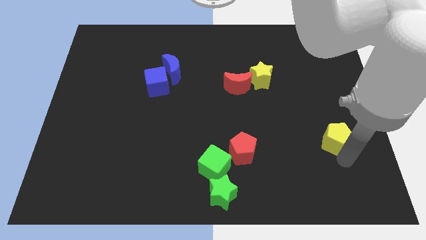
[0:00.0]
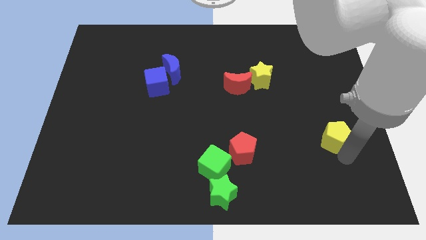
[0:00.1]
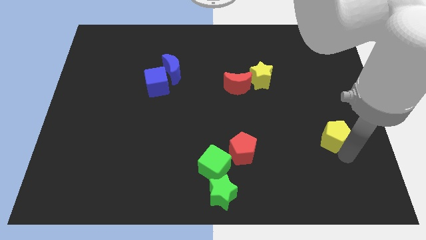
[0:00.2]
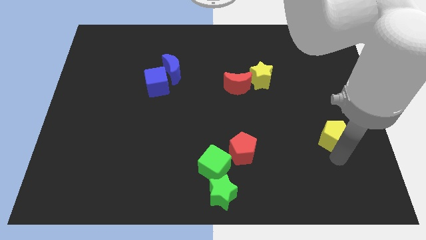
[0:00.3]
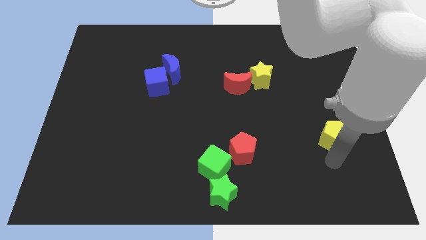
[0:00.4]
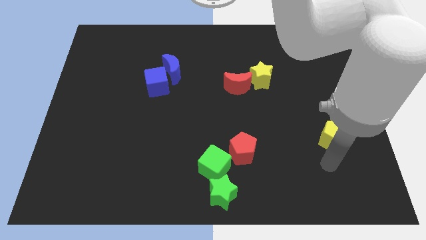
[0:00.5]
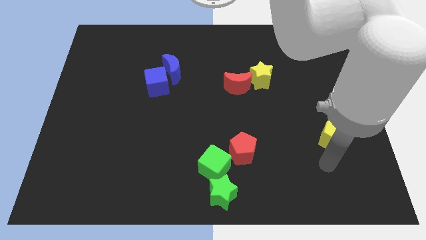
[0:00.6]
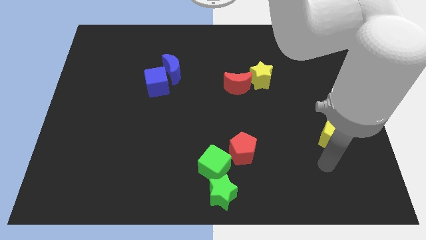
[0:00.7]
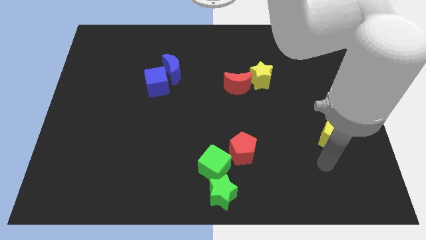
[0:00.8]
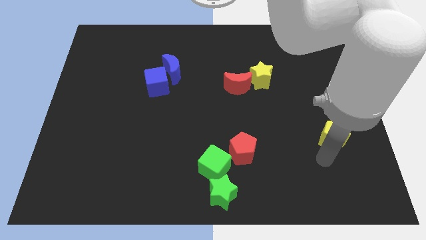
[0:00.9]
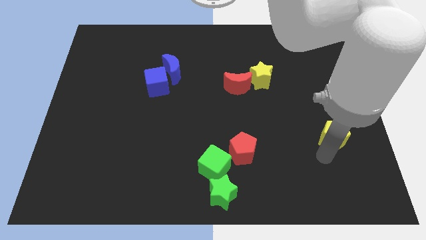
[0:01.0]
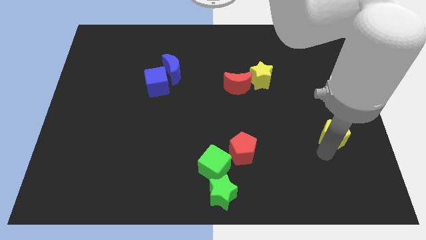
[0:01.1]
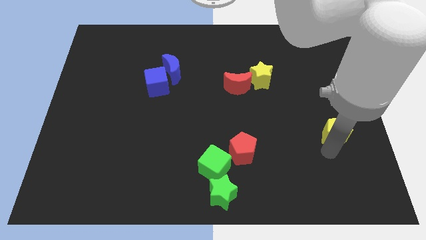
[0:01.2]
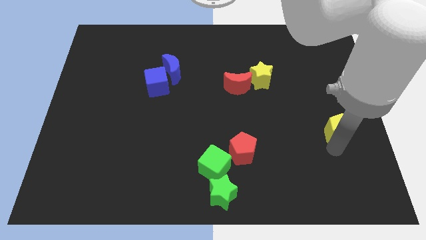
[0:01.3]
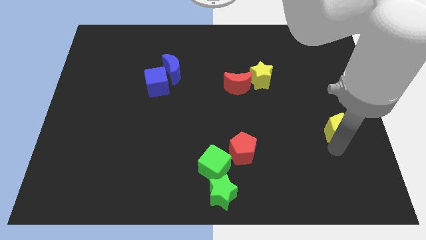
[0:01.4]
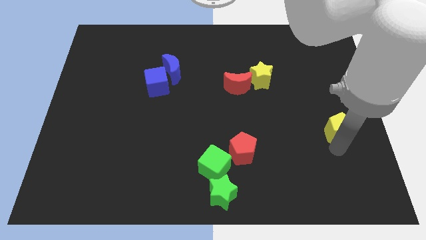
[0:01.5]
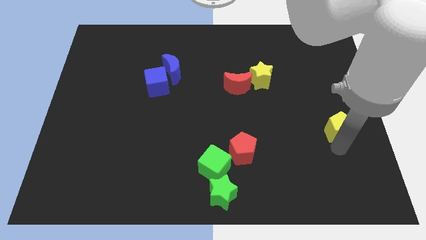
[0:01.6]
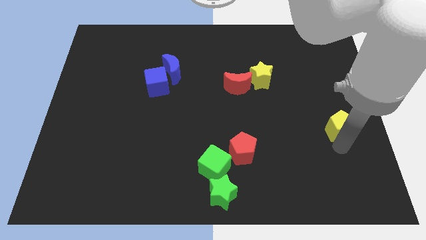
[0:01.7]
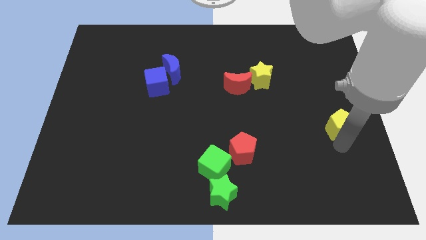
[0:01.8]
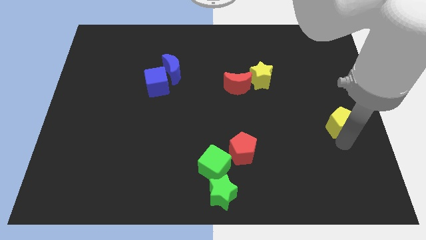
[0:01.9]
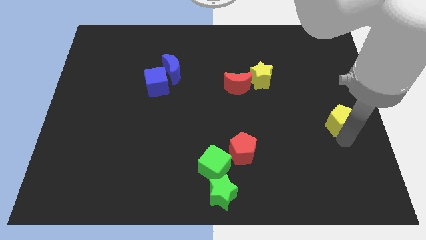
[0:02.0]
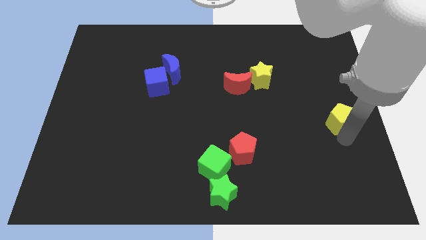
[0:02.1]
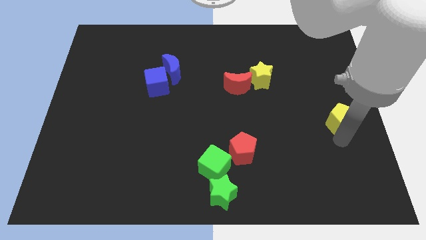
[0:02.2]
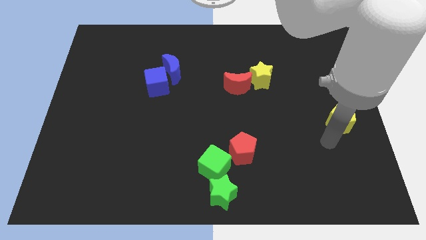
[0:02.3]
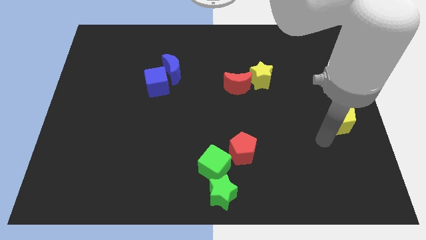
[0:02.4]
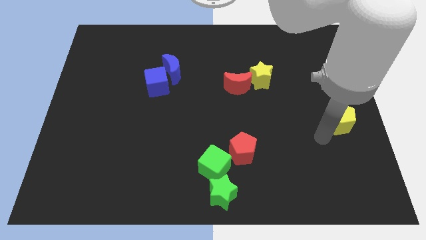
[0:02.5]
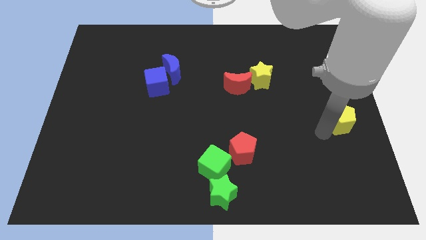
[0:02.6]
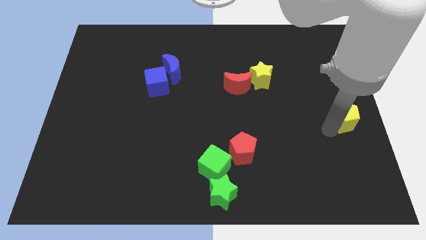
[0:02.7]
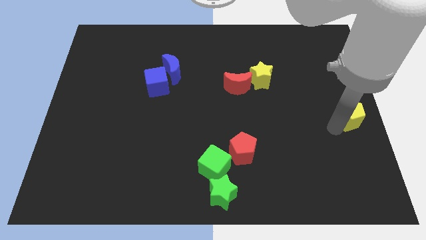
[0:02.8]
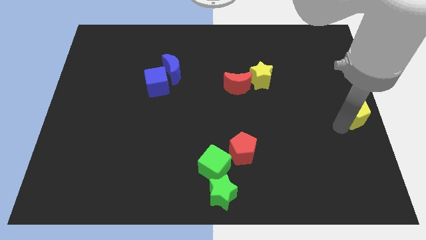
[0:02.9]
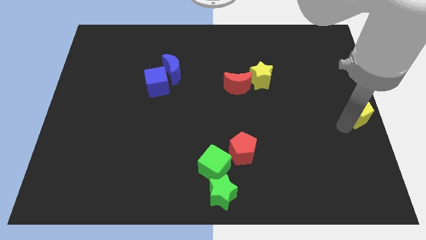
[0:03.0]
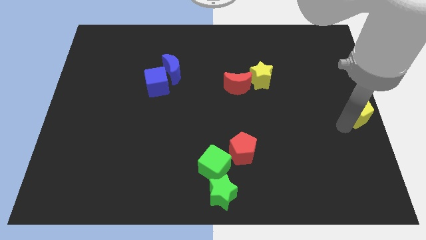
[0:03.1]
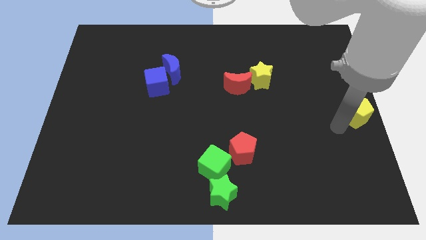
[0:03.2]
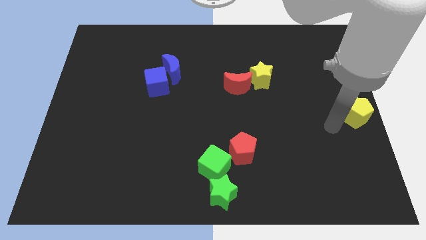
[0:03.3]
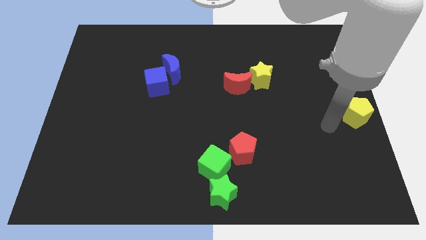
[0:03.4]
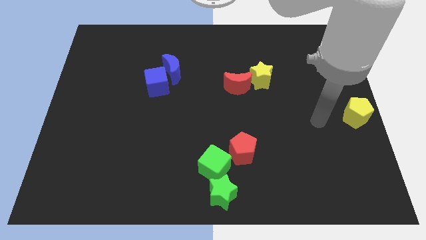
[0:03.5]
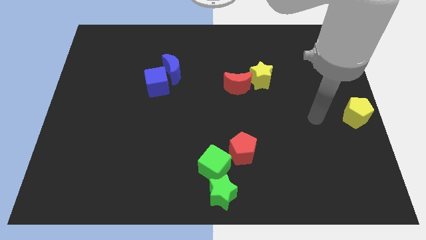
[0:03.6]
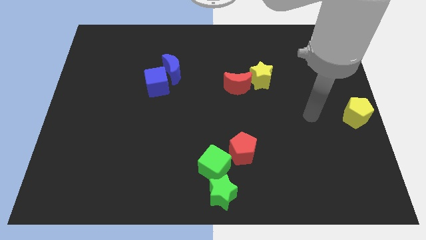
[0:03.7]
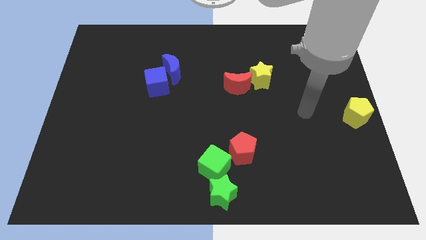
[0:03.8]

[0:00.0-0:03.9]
move the yellow pentagon to the middle right of the board

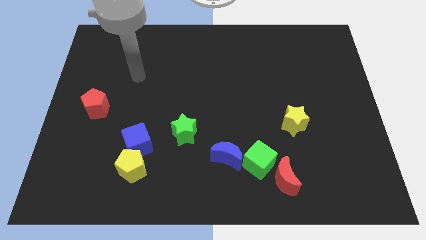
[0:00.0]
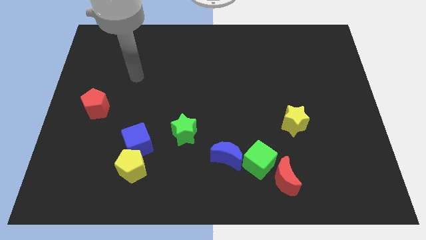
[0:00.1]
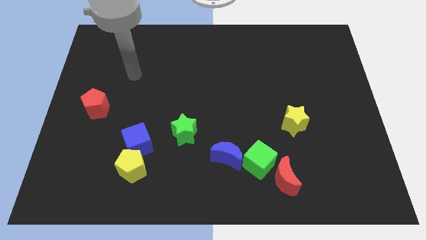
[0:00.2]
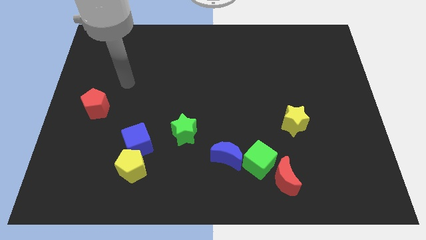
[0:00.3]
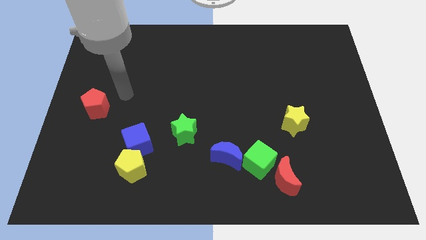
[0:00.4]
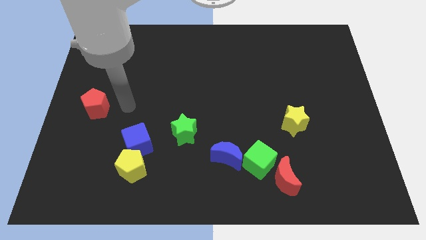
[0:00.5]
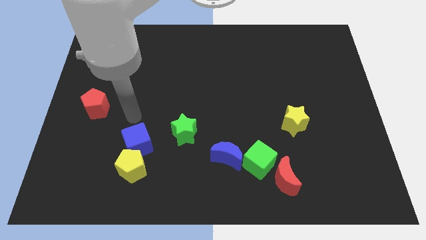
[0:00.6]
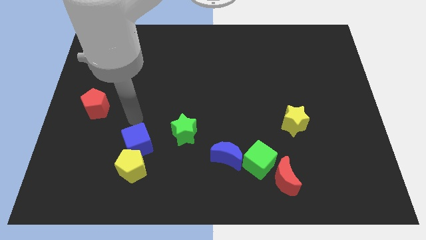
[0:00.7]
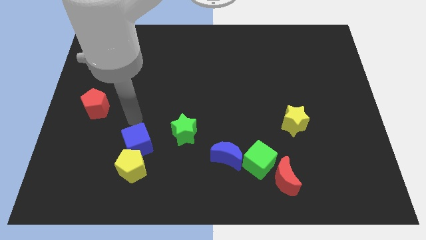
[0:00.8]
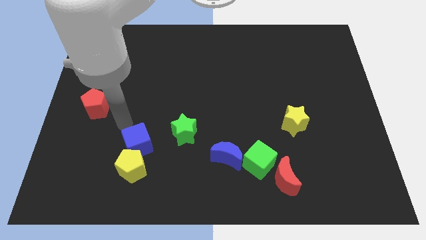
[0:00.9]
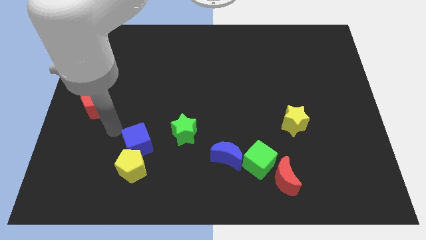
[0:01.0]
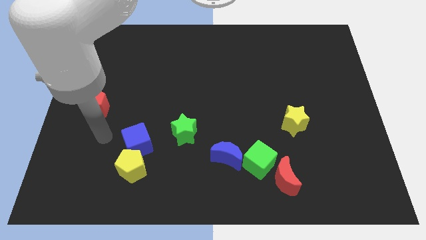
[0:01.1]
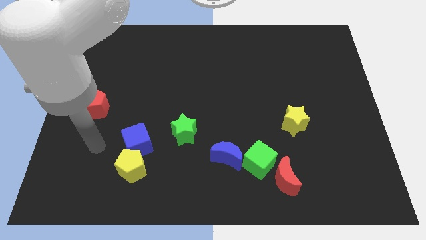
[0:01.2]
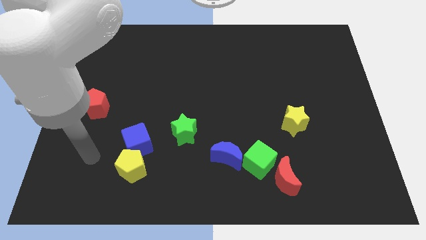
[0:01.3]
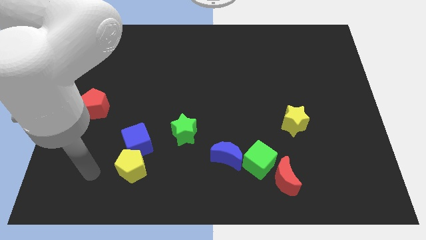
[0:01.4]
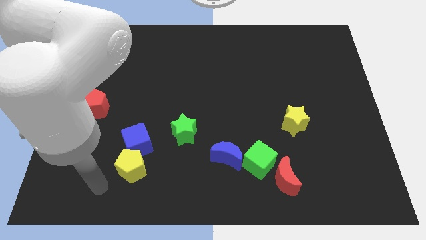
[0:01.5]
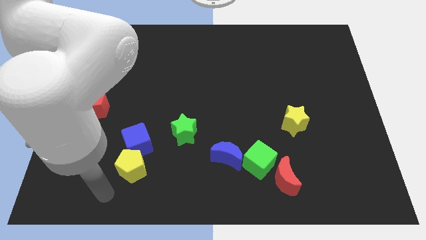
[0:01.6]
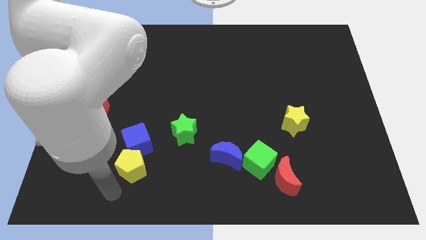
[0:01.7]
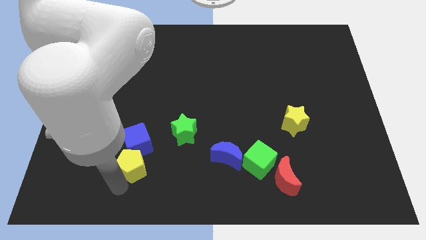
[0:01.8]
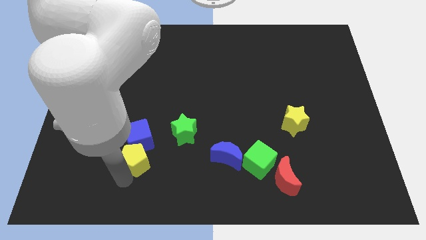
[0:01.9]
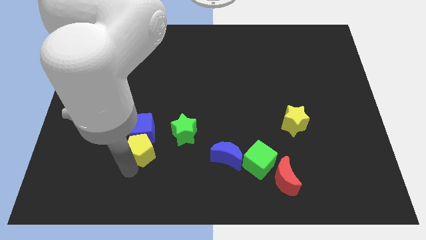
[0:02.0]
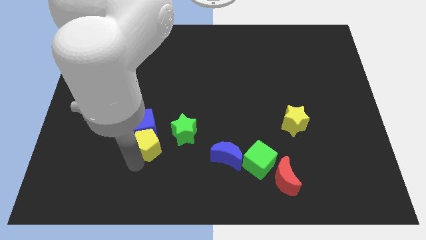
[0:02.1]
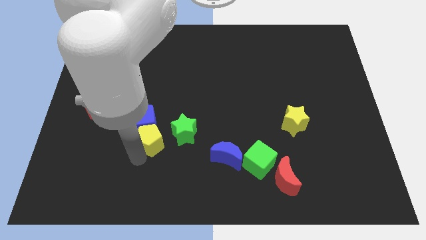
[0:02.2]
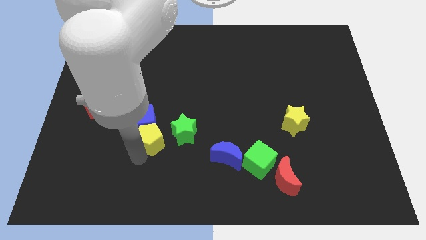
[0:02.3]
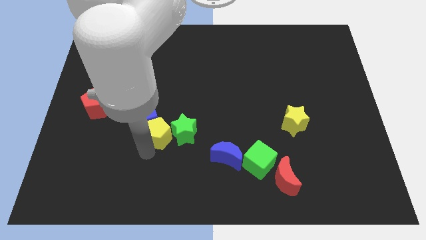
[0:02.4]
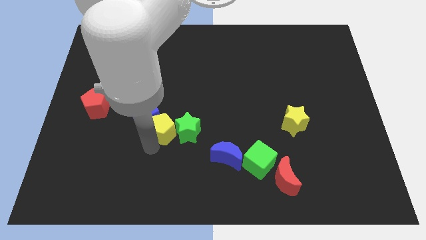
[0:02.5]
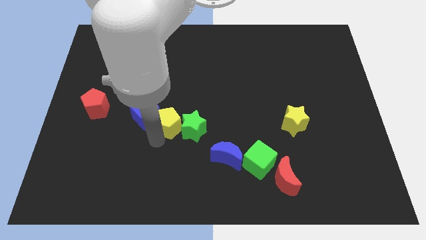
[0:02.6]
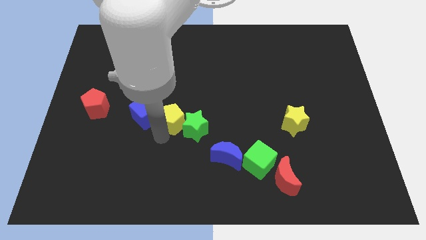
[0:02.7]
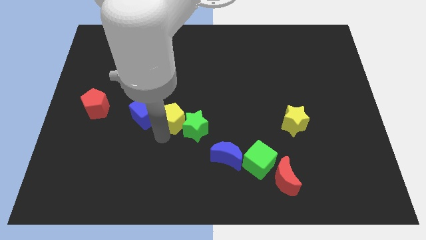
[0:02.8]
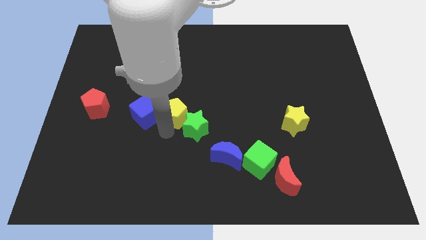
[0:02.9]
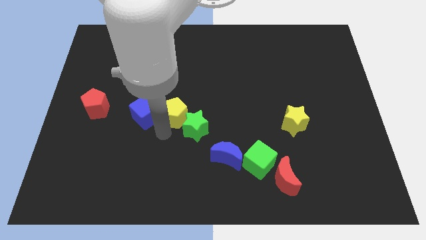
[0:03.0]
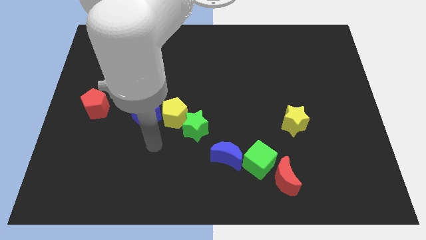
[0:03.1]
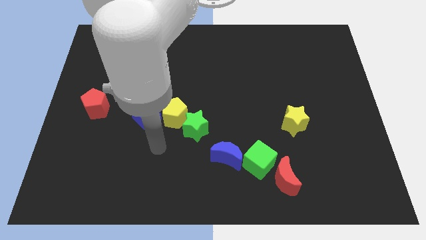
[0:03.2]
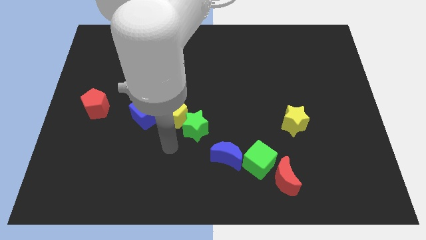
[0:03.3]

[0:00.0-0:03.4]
move the yellow pentagon to the top left side of the green star

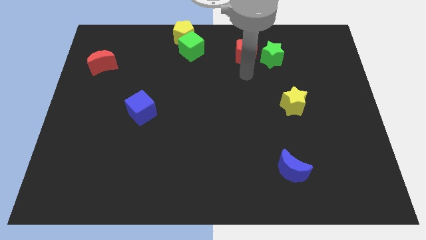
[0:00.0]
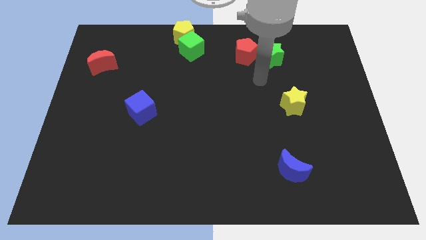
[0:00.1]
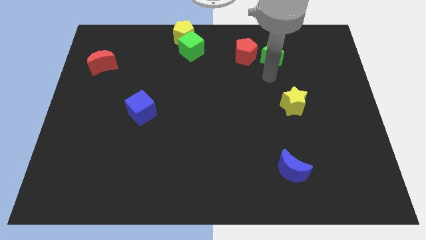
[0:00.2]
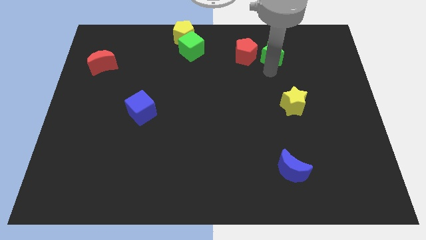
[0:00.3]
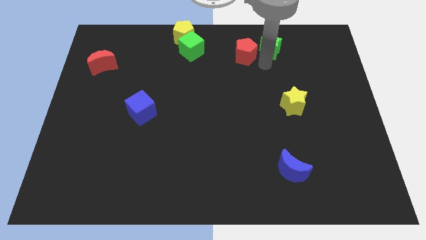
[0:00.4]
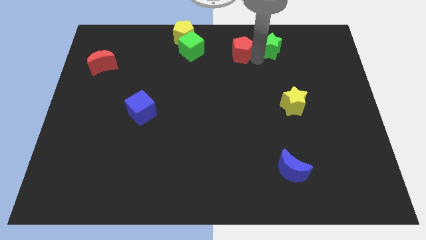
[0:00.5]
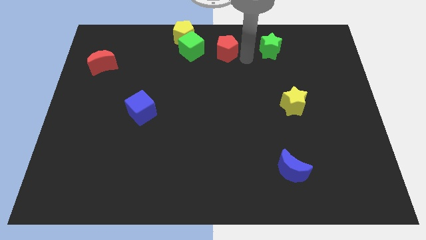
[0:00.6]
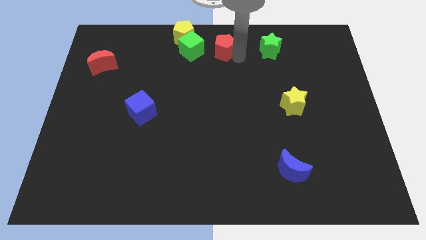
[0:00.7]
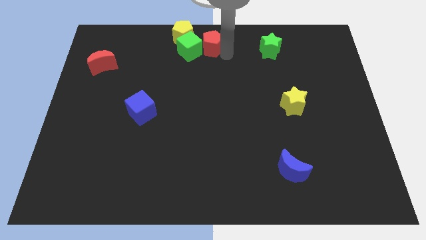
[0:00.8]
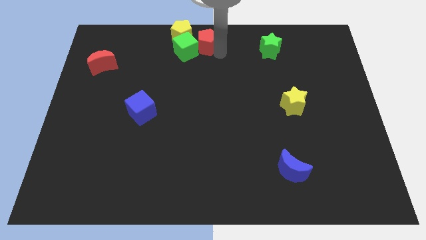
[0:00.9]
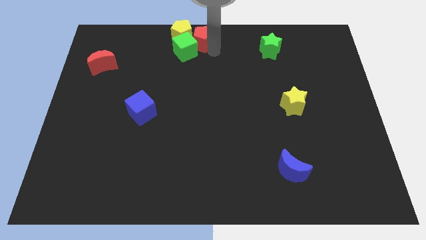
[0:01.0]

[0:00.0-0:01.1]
push the red pentagon into green cube

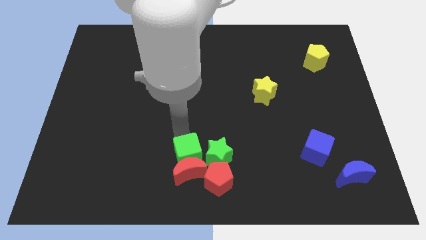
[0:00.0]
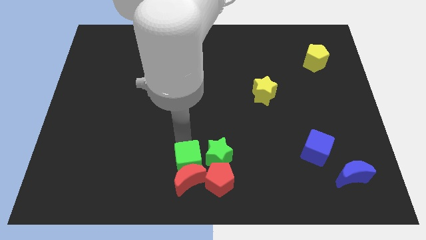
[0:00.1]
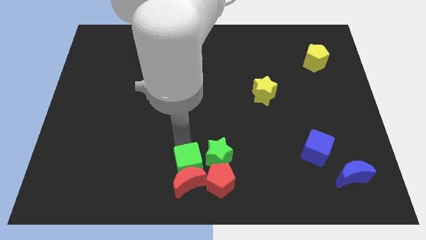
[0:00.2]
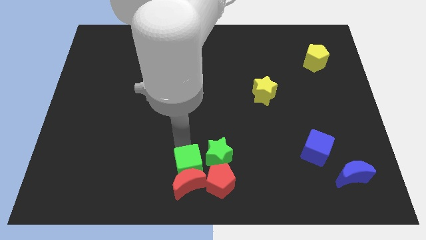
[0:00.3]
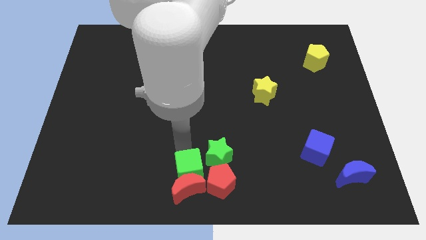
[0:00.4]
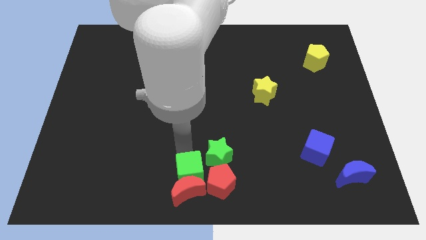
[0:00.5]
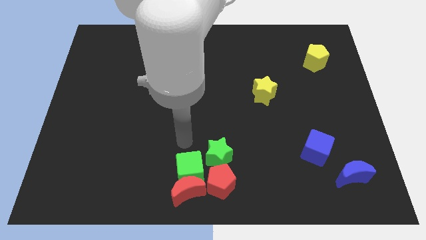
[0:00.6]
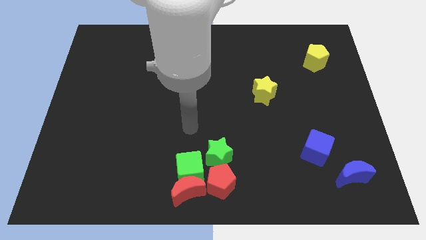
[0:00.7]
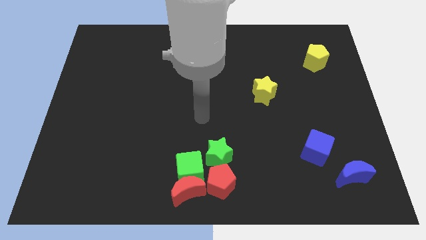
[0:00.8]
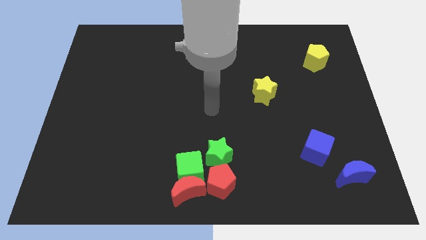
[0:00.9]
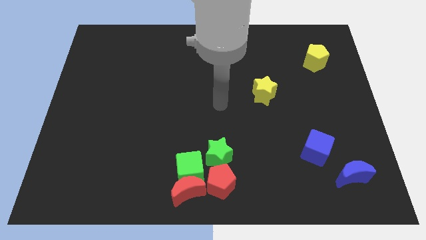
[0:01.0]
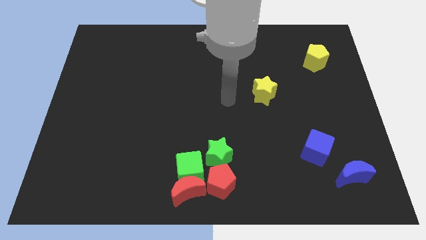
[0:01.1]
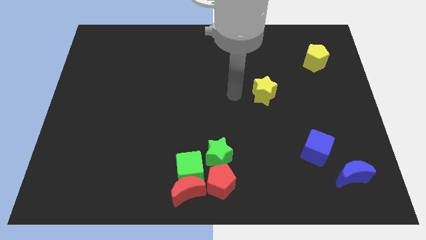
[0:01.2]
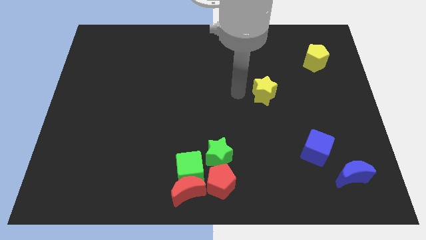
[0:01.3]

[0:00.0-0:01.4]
move the two blocks green cube and red crescent into left red pentagon
